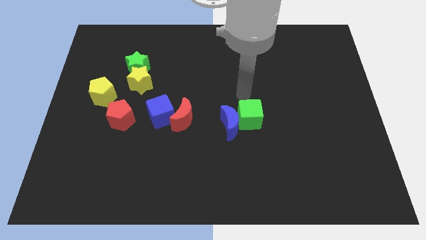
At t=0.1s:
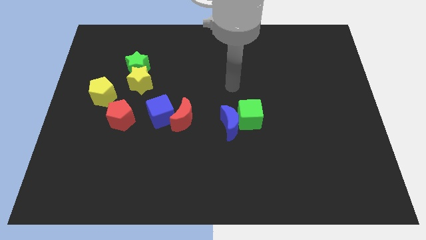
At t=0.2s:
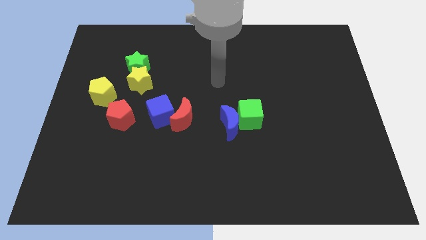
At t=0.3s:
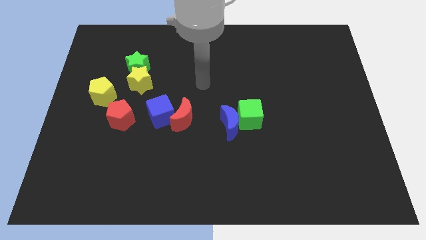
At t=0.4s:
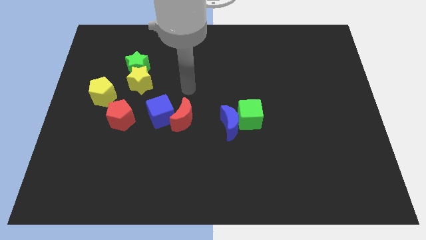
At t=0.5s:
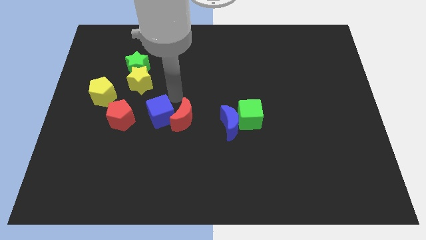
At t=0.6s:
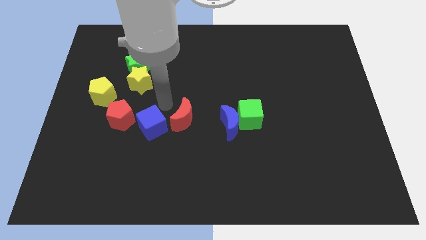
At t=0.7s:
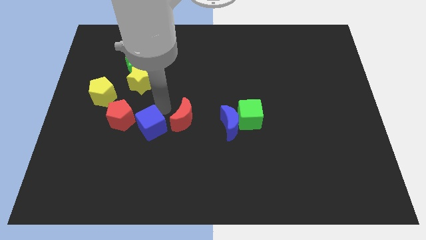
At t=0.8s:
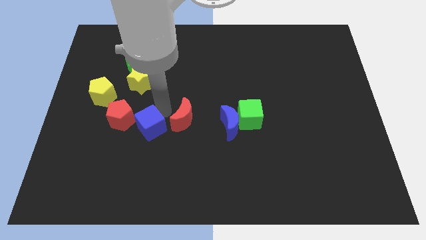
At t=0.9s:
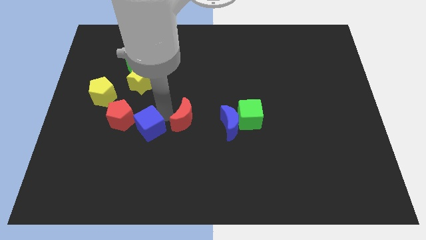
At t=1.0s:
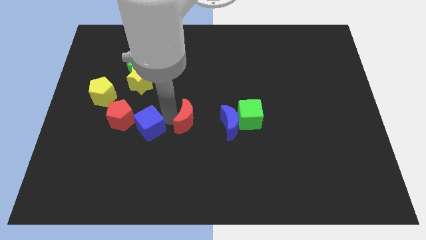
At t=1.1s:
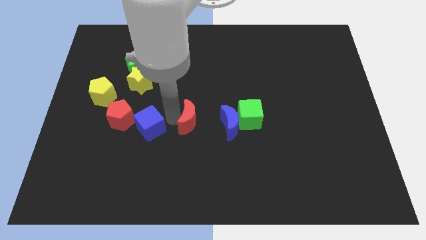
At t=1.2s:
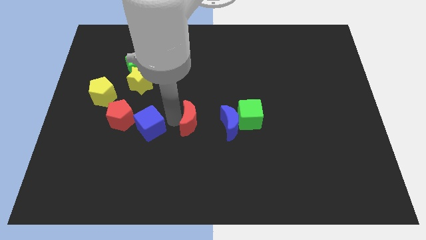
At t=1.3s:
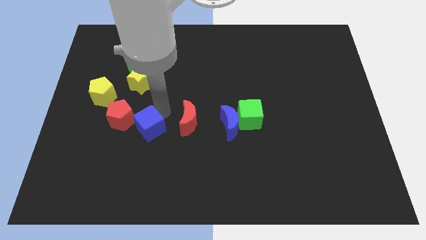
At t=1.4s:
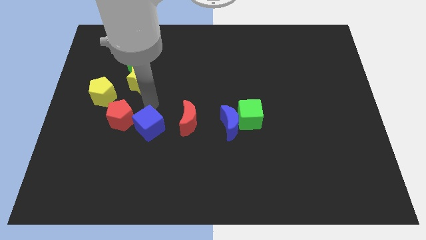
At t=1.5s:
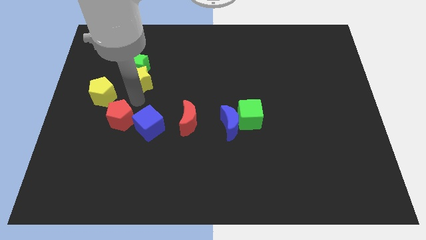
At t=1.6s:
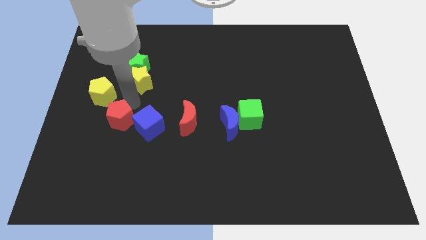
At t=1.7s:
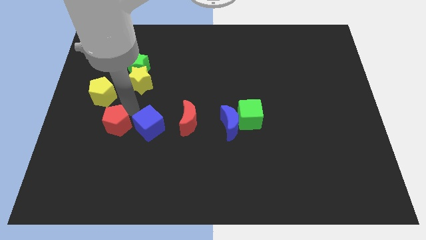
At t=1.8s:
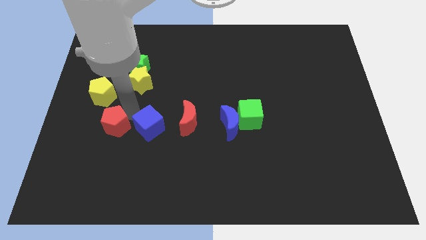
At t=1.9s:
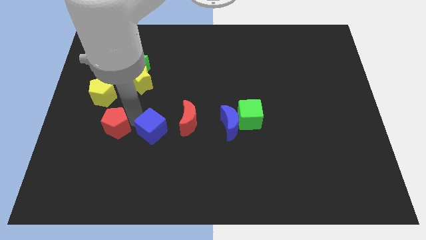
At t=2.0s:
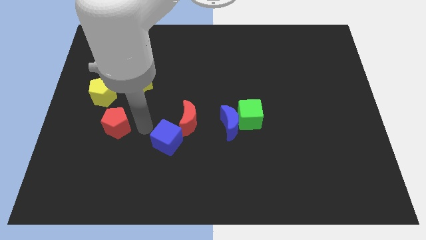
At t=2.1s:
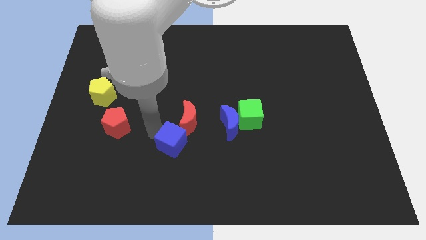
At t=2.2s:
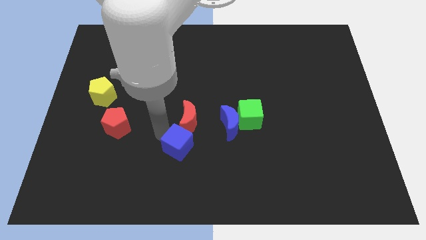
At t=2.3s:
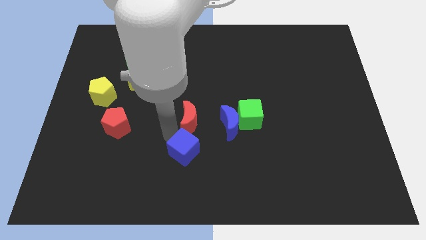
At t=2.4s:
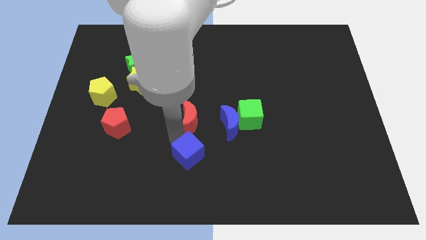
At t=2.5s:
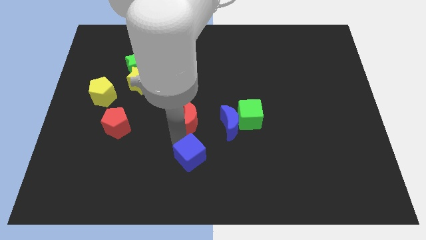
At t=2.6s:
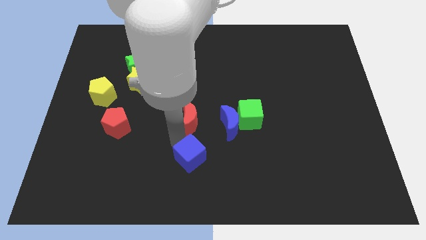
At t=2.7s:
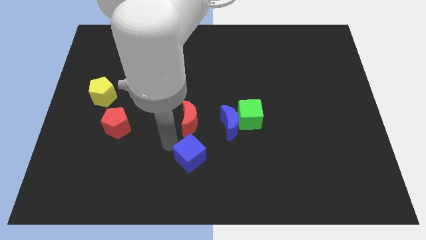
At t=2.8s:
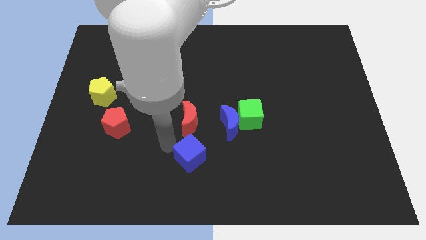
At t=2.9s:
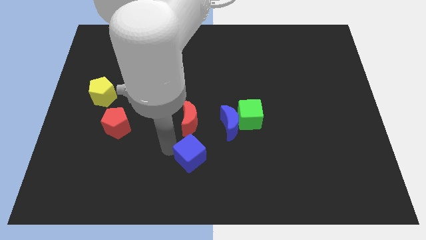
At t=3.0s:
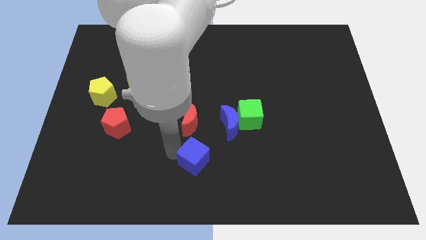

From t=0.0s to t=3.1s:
push the blue cube to the bottom right of the red pentagon

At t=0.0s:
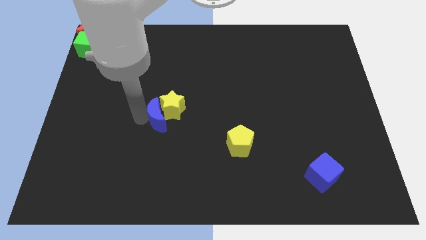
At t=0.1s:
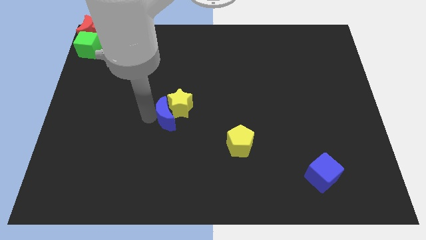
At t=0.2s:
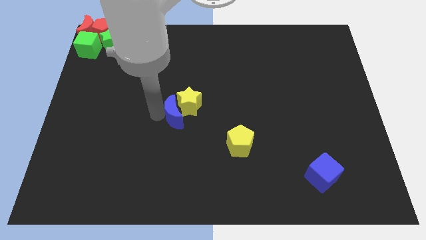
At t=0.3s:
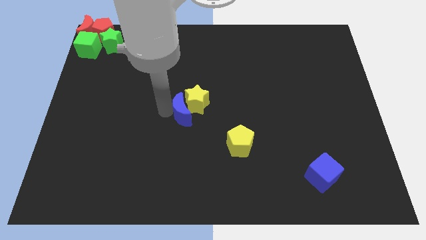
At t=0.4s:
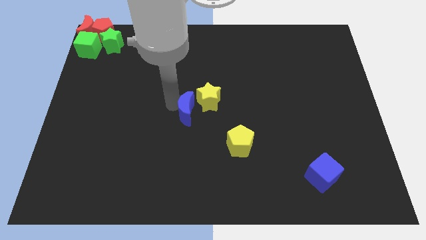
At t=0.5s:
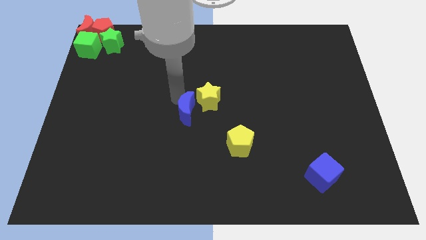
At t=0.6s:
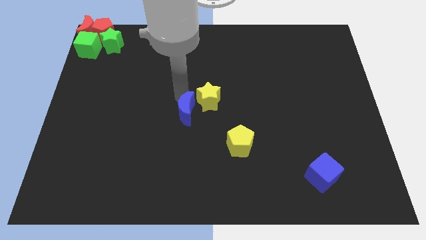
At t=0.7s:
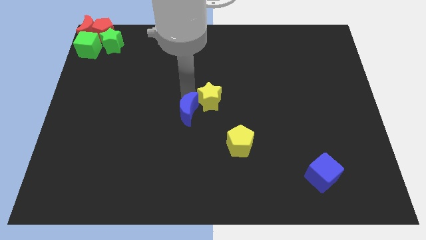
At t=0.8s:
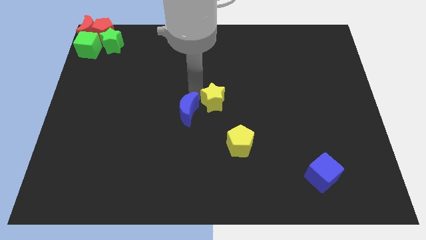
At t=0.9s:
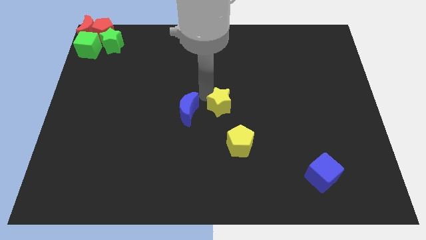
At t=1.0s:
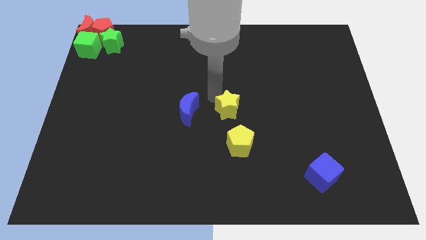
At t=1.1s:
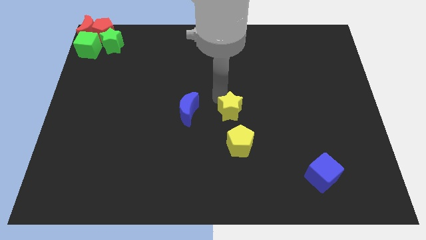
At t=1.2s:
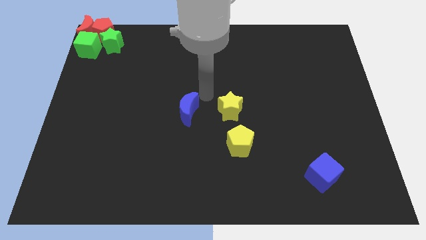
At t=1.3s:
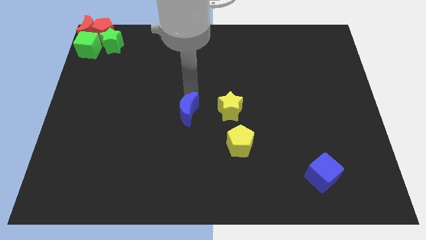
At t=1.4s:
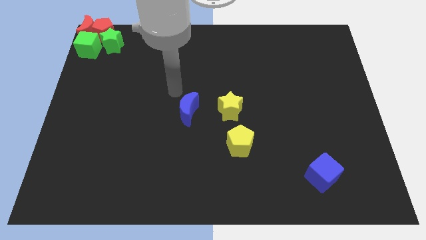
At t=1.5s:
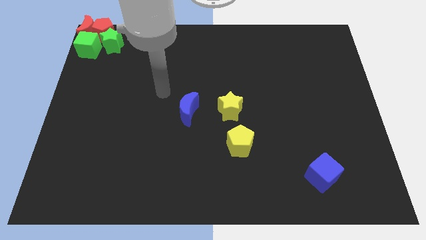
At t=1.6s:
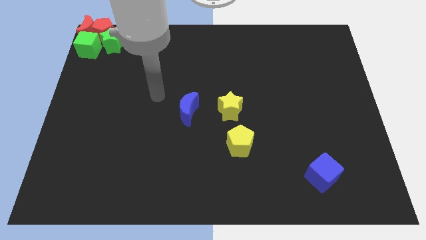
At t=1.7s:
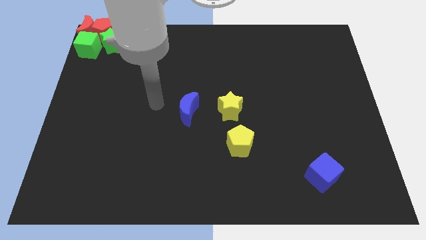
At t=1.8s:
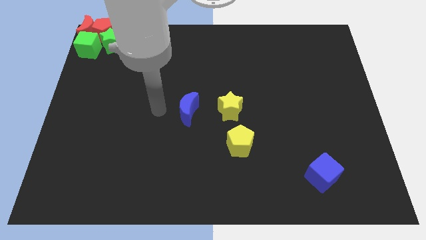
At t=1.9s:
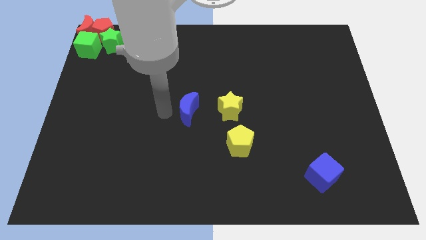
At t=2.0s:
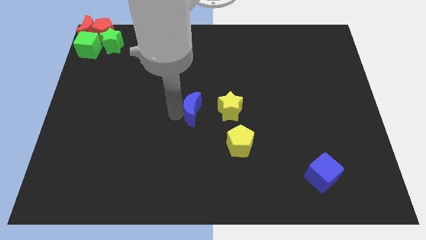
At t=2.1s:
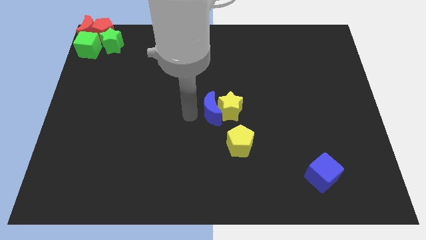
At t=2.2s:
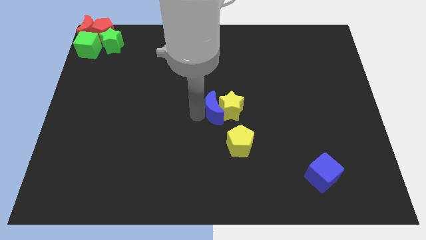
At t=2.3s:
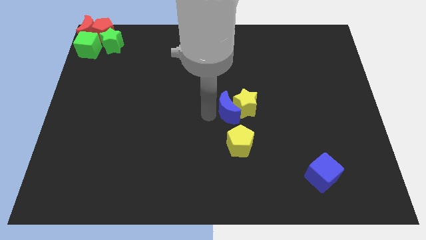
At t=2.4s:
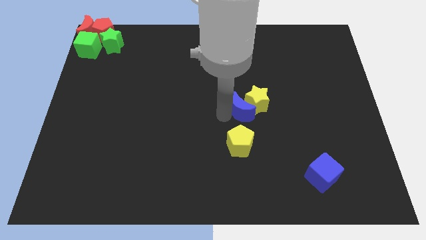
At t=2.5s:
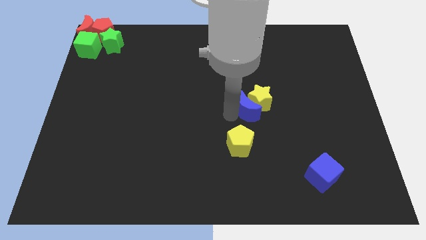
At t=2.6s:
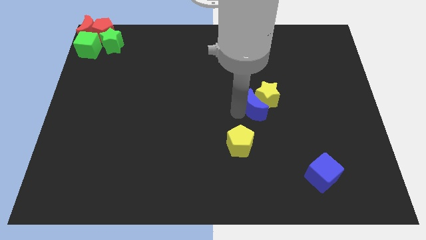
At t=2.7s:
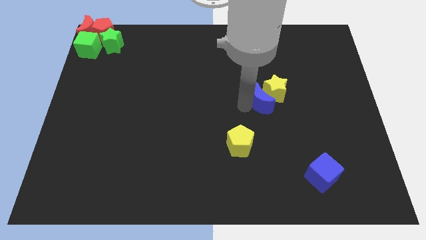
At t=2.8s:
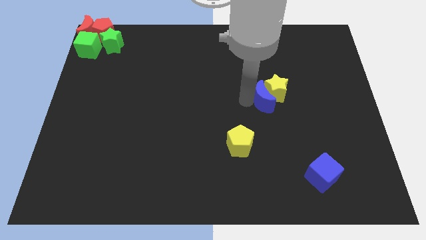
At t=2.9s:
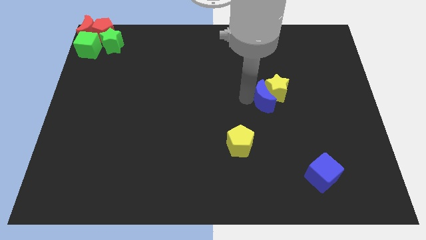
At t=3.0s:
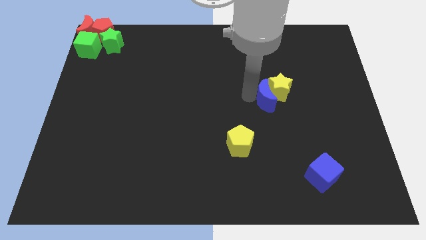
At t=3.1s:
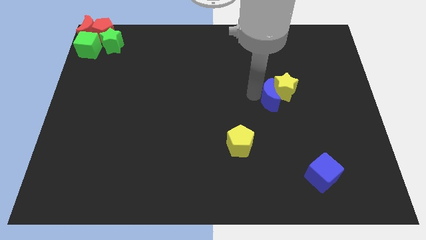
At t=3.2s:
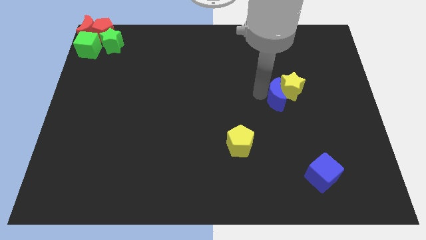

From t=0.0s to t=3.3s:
move the blue crescent and the yellow star diagonally top right to the yellow pentagon

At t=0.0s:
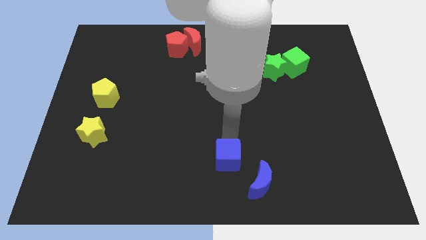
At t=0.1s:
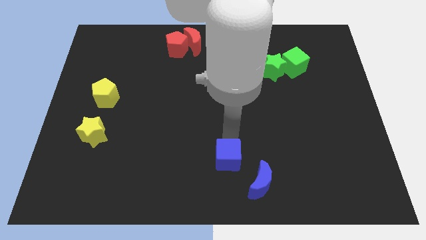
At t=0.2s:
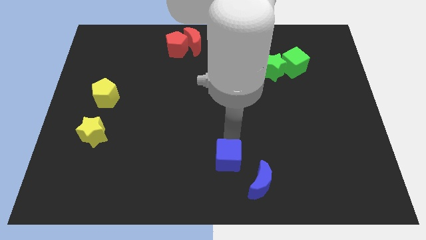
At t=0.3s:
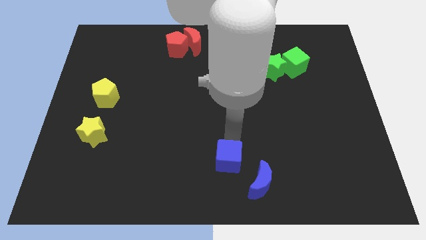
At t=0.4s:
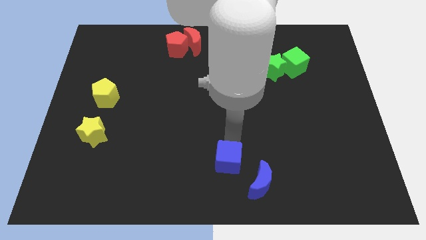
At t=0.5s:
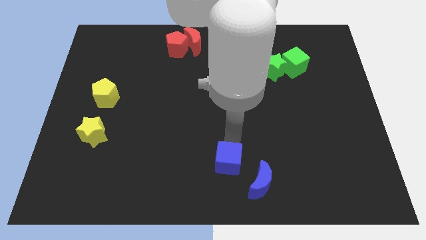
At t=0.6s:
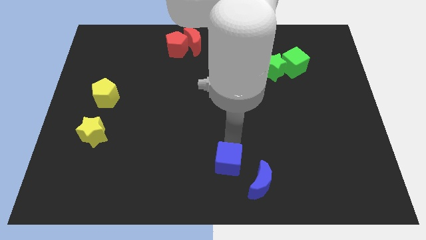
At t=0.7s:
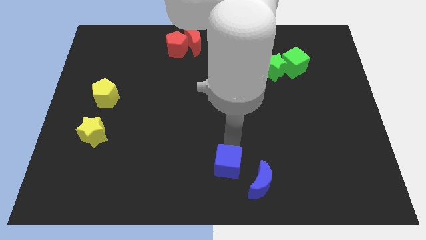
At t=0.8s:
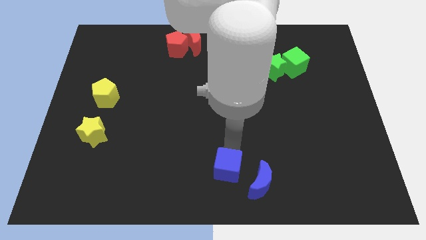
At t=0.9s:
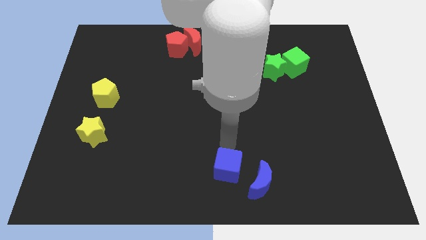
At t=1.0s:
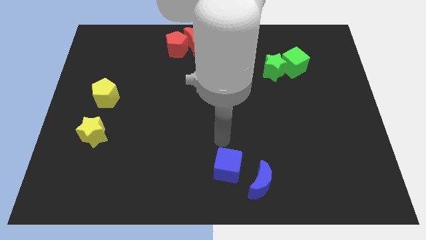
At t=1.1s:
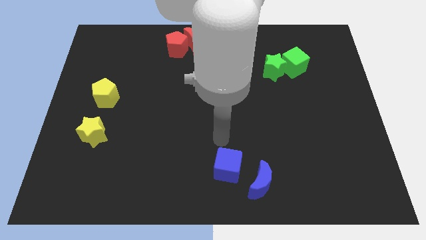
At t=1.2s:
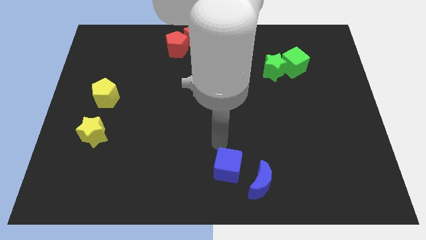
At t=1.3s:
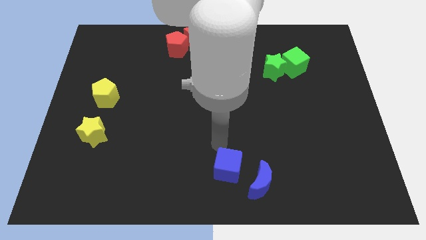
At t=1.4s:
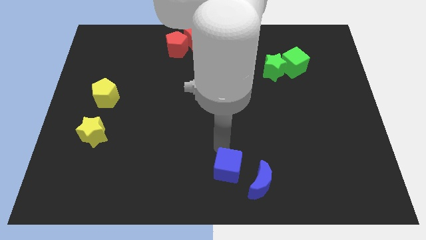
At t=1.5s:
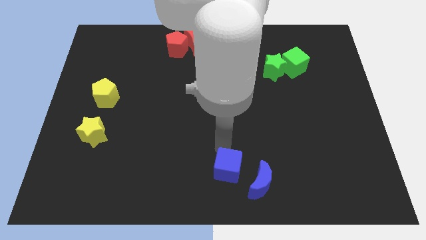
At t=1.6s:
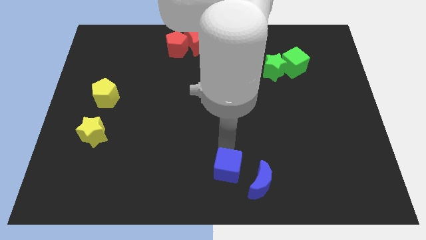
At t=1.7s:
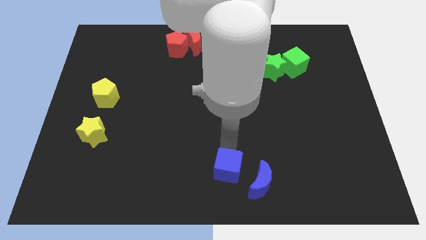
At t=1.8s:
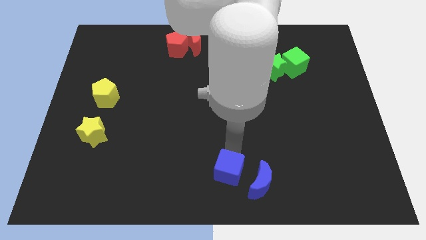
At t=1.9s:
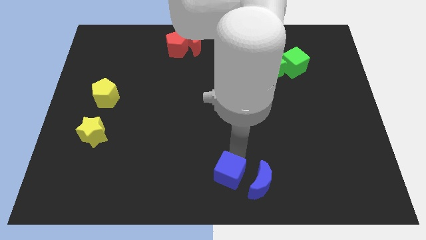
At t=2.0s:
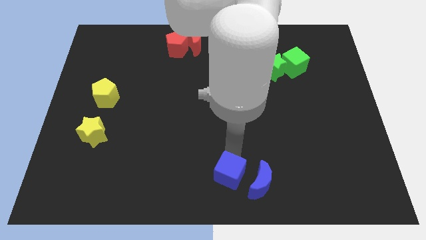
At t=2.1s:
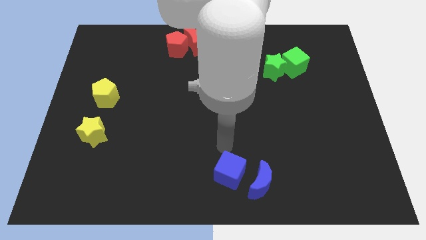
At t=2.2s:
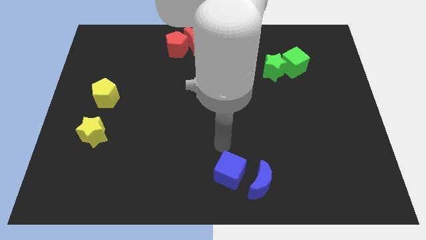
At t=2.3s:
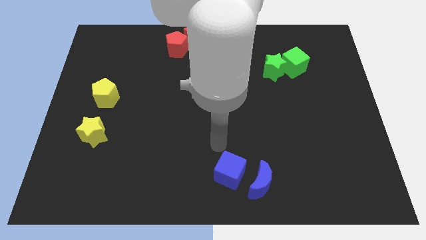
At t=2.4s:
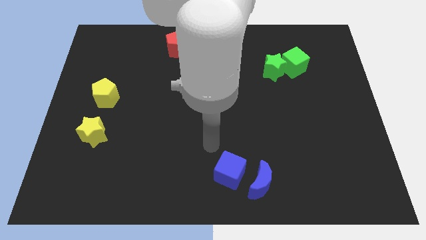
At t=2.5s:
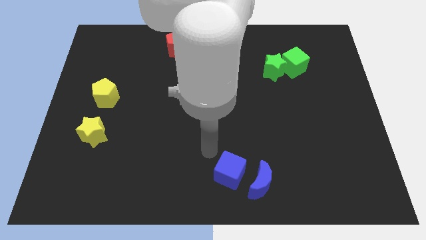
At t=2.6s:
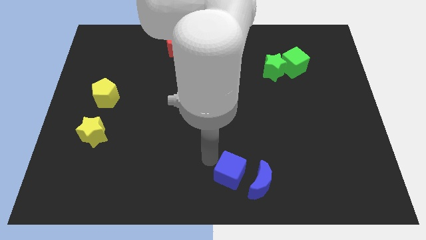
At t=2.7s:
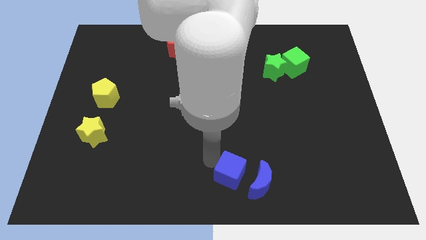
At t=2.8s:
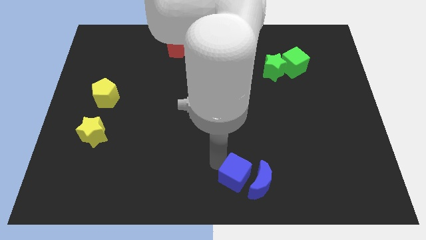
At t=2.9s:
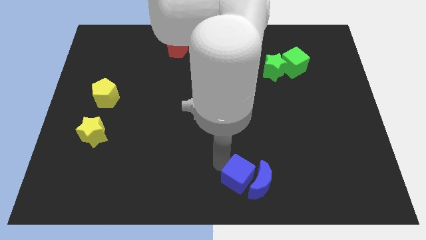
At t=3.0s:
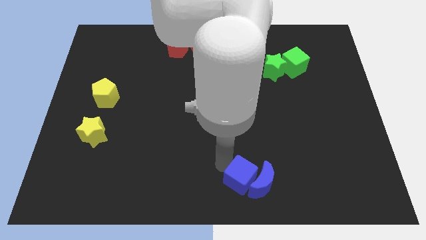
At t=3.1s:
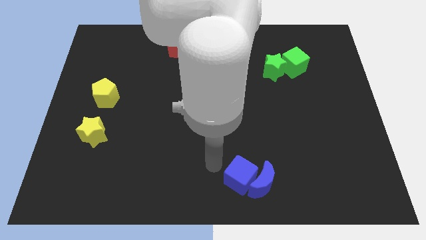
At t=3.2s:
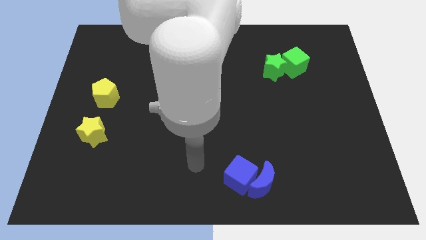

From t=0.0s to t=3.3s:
push the blue cube into the blue moon
